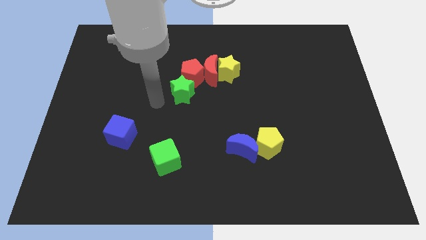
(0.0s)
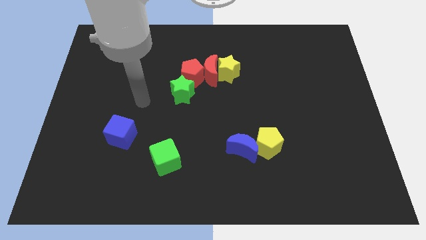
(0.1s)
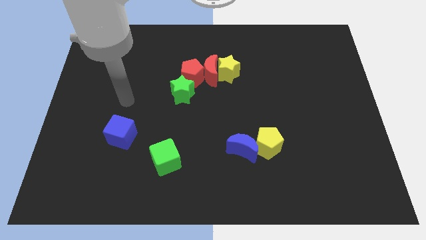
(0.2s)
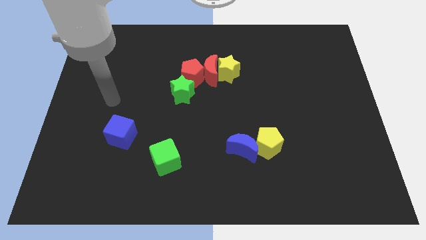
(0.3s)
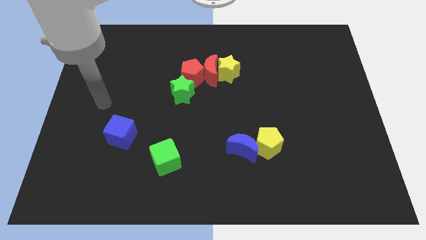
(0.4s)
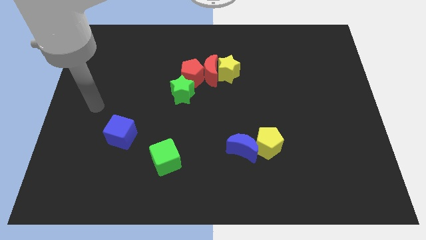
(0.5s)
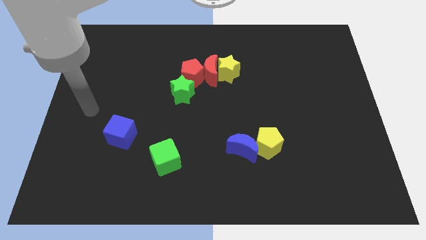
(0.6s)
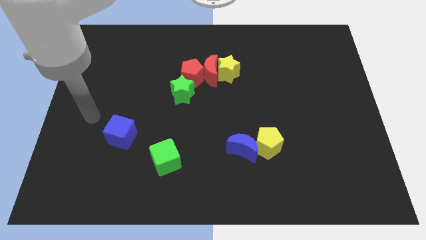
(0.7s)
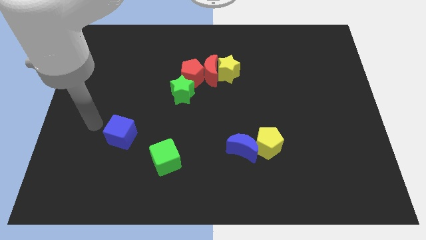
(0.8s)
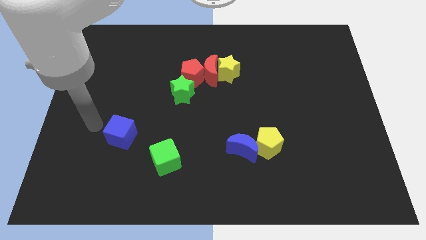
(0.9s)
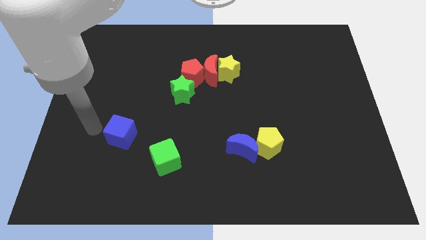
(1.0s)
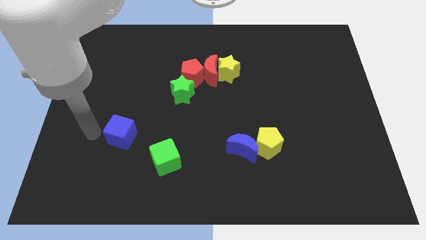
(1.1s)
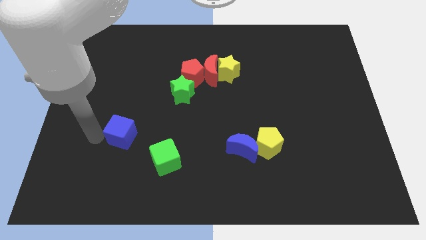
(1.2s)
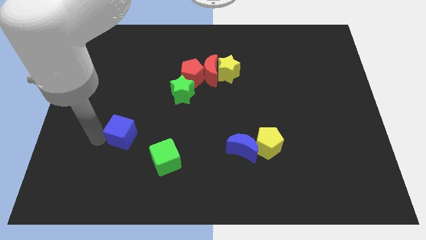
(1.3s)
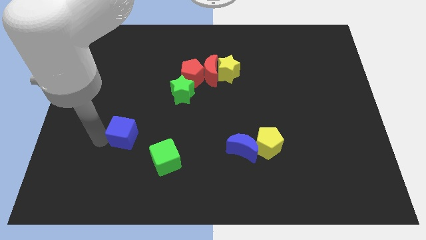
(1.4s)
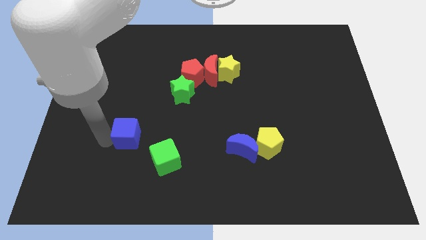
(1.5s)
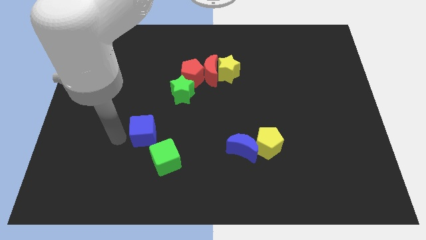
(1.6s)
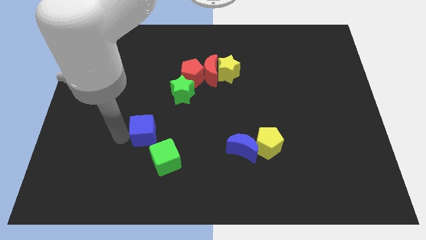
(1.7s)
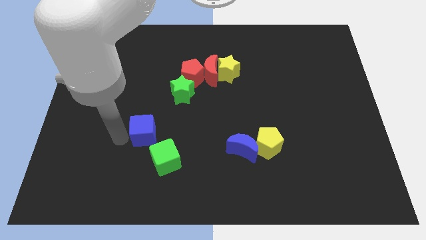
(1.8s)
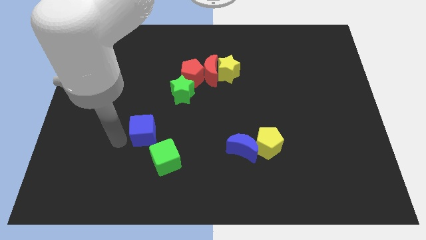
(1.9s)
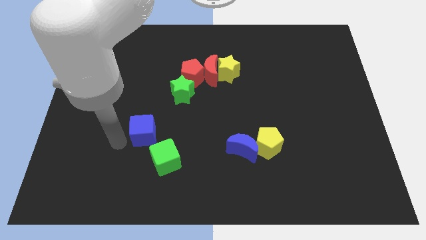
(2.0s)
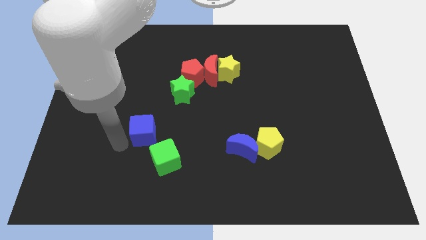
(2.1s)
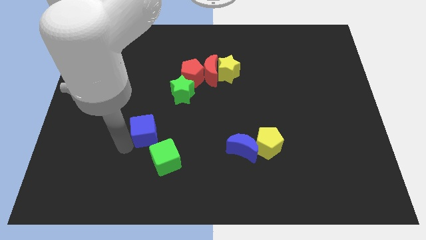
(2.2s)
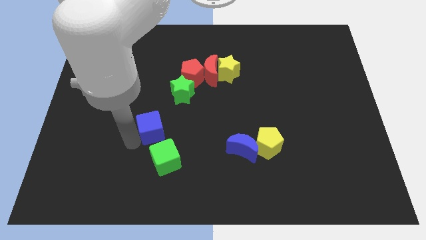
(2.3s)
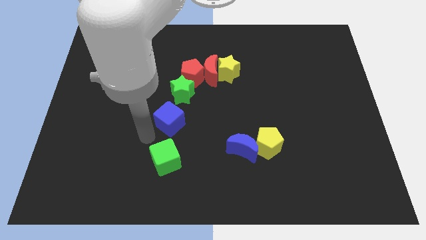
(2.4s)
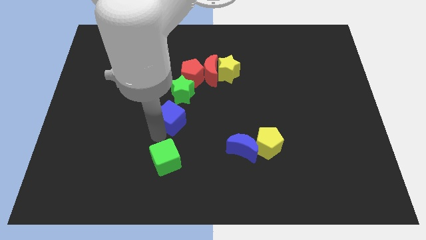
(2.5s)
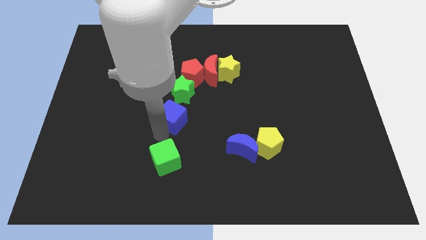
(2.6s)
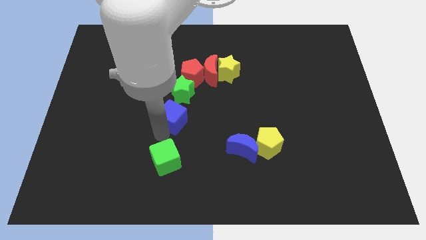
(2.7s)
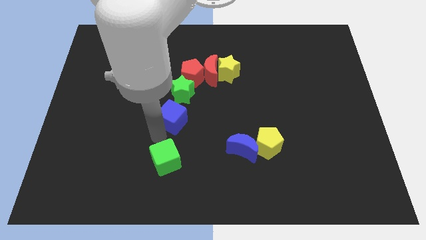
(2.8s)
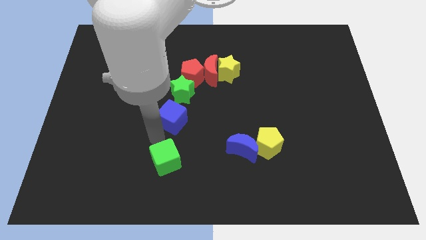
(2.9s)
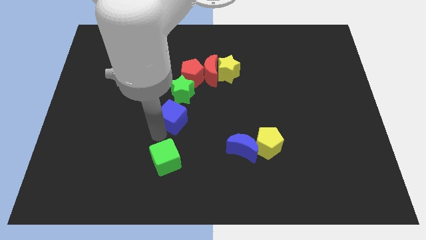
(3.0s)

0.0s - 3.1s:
push the blue cube below the green star

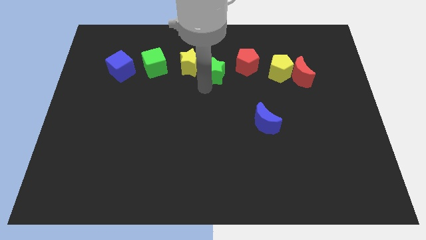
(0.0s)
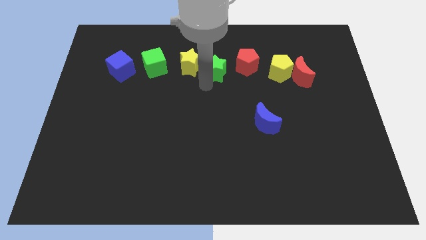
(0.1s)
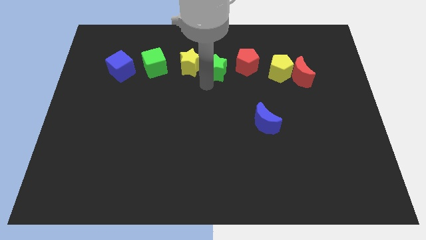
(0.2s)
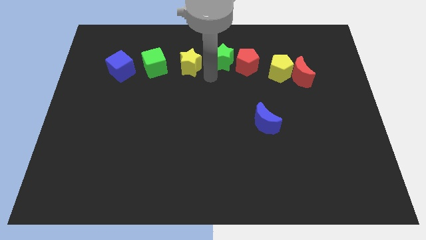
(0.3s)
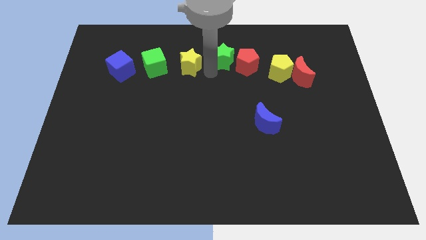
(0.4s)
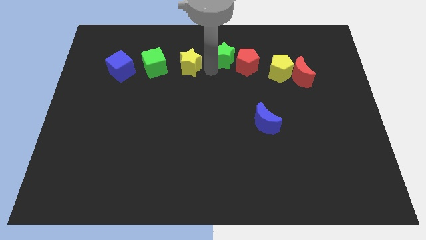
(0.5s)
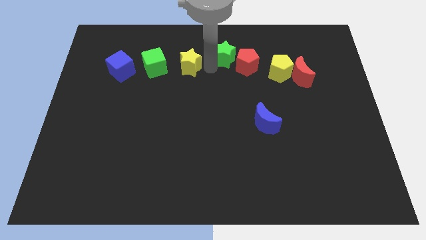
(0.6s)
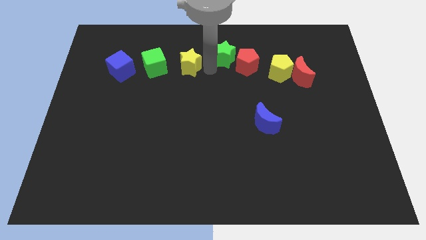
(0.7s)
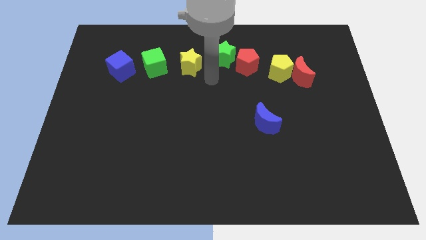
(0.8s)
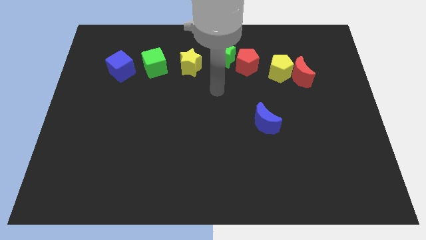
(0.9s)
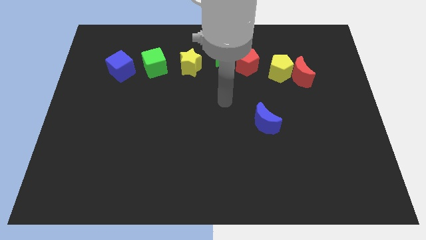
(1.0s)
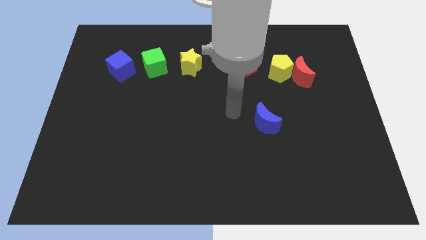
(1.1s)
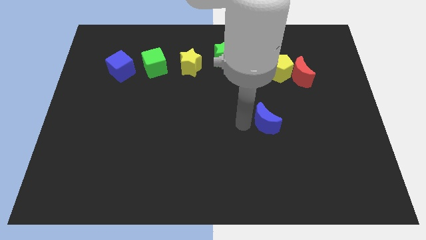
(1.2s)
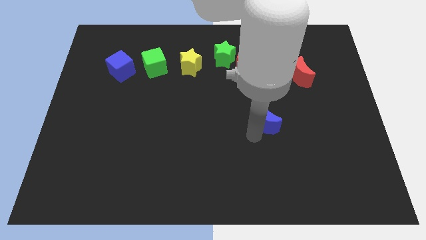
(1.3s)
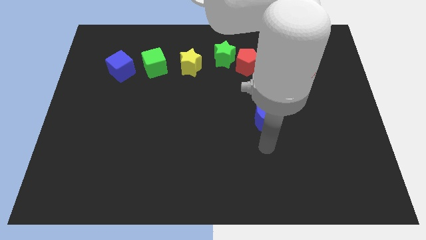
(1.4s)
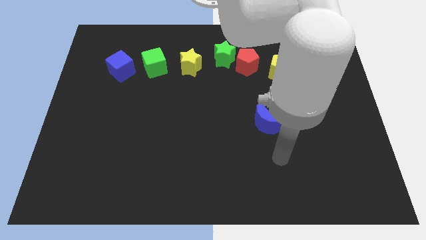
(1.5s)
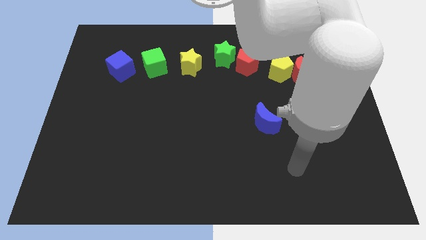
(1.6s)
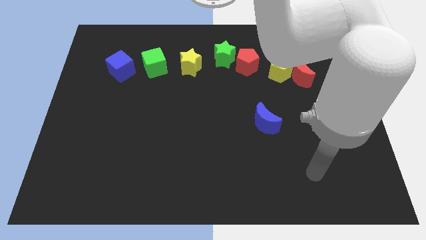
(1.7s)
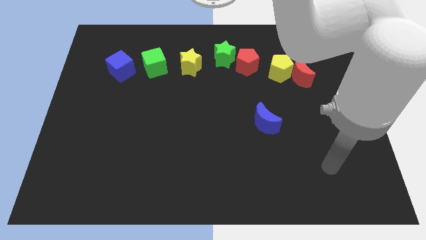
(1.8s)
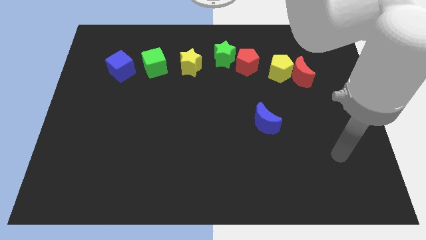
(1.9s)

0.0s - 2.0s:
slightly move the green star towards the top center of the board

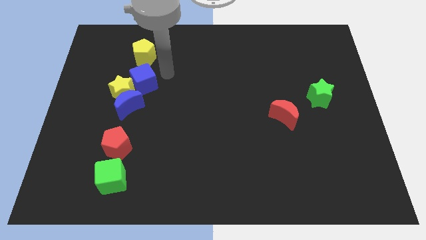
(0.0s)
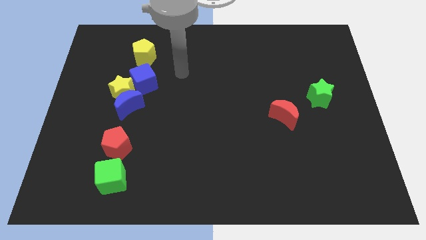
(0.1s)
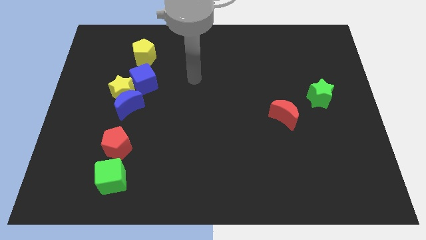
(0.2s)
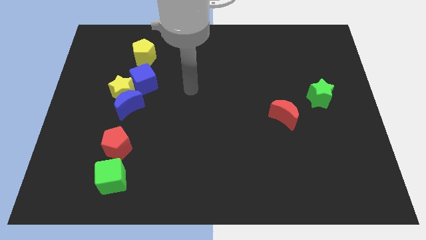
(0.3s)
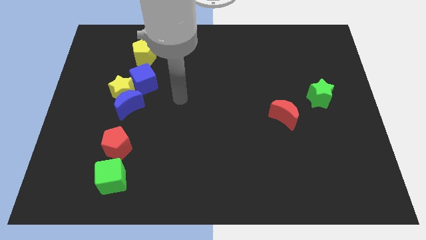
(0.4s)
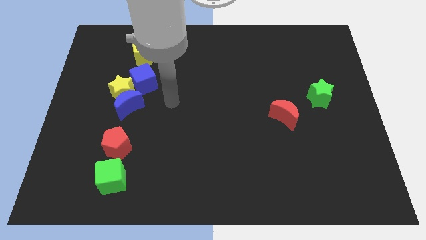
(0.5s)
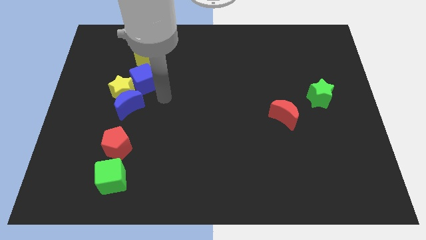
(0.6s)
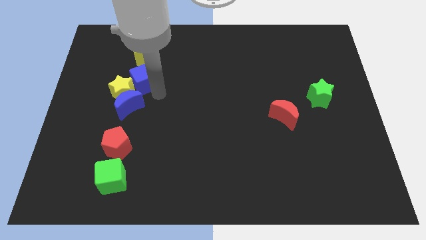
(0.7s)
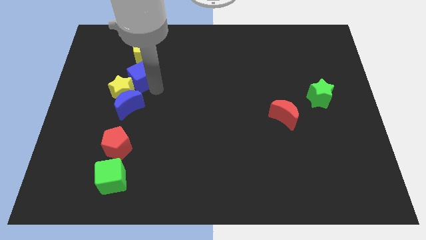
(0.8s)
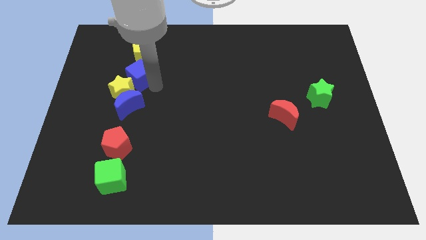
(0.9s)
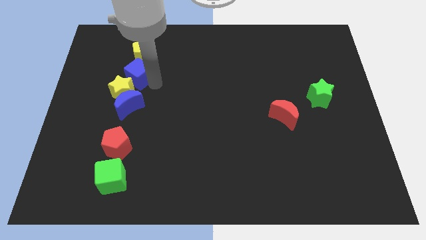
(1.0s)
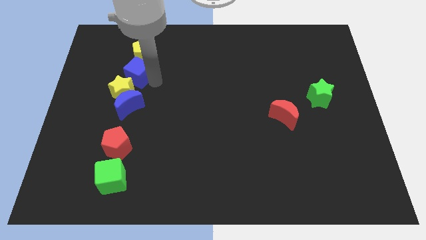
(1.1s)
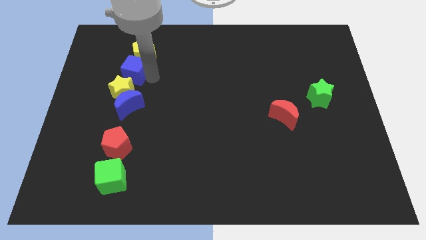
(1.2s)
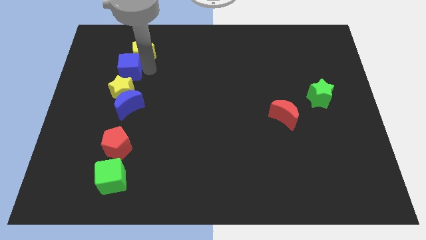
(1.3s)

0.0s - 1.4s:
adjust the blue cube in between yellow star and yellow pentagon

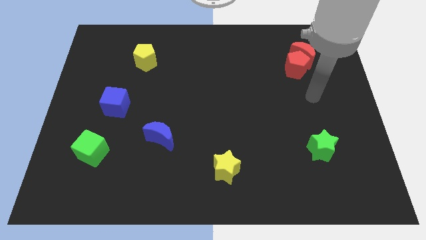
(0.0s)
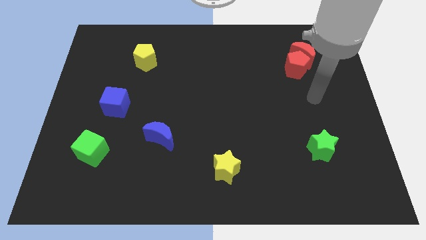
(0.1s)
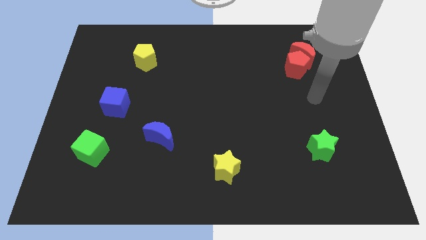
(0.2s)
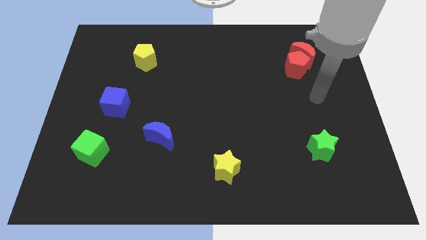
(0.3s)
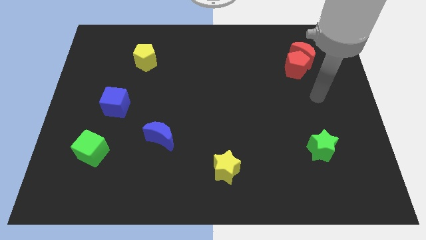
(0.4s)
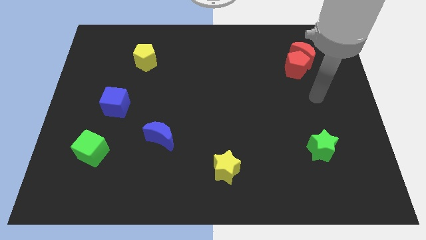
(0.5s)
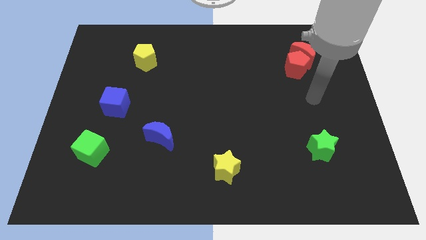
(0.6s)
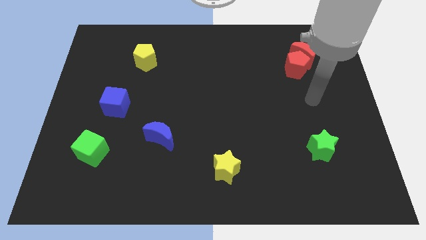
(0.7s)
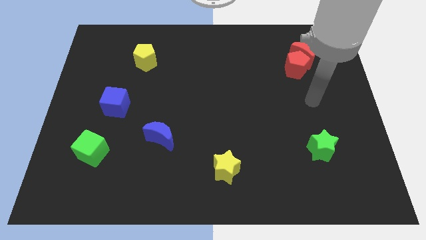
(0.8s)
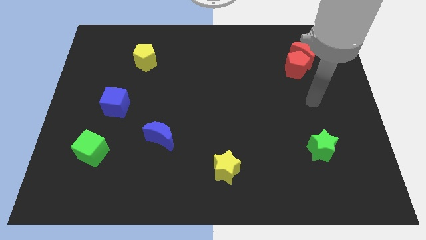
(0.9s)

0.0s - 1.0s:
push arm in between red blocks and green star

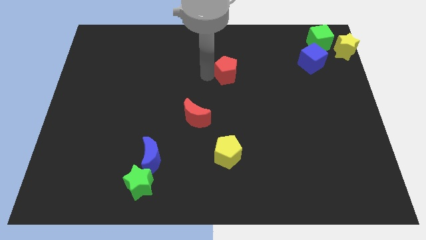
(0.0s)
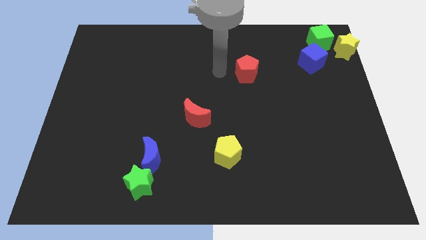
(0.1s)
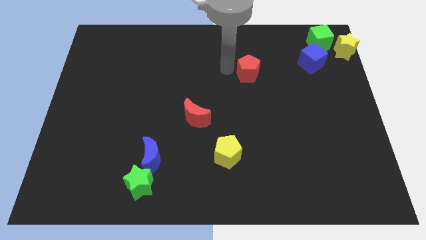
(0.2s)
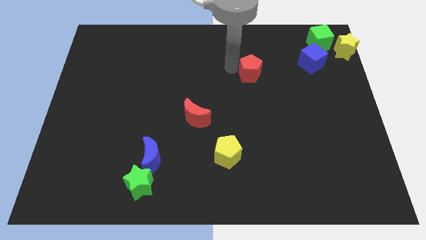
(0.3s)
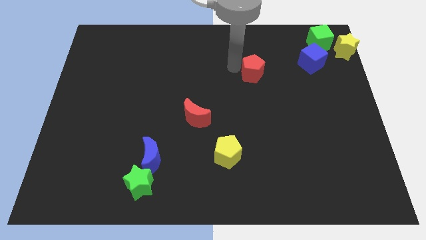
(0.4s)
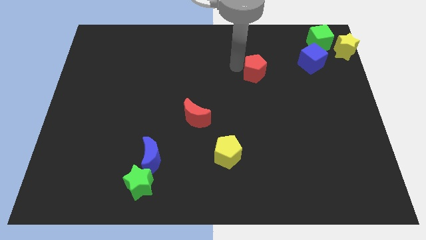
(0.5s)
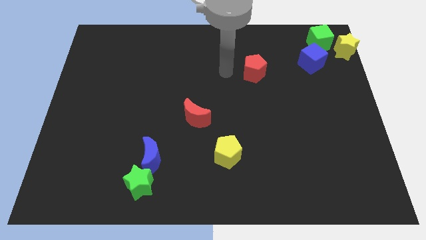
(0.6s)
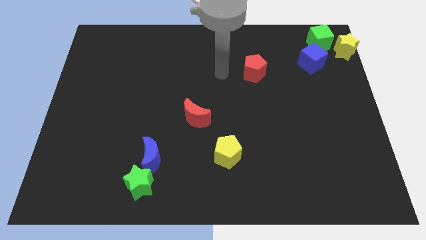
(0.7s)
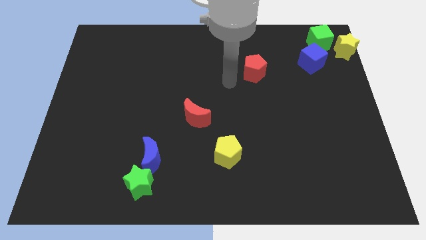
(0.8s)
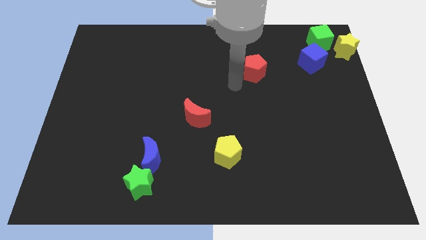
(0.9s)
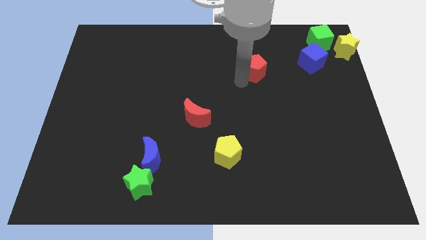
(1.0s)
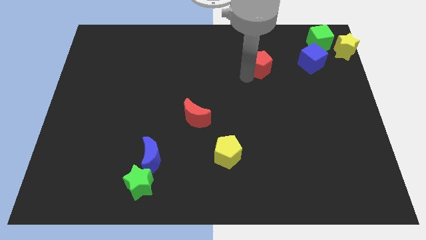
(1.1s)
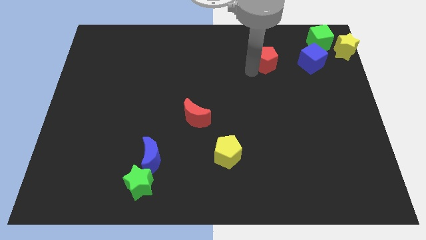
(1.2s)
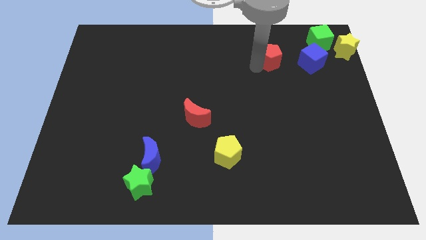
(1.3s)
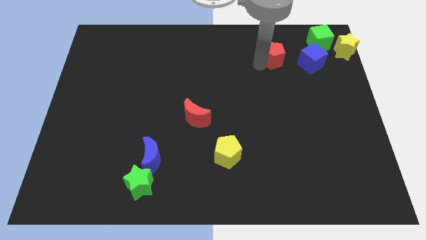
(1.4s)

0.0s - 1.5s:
push the red pentagon slightly to the right of the board
